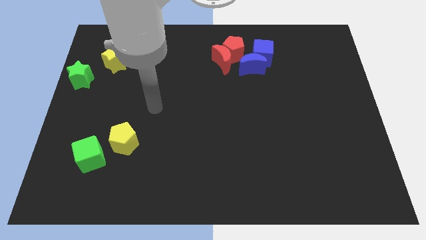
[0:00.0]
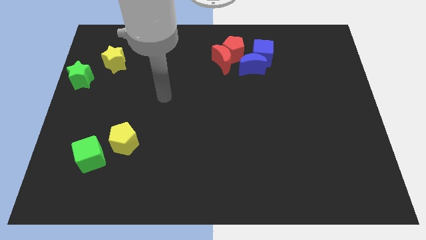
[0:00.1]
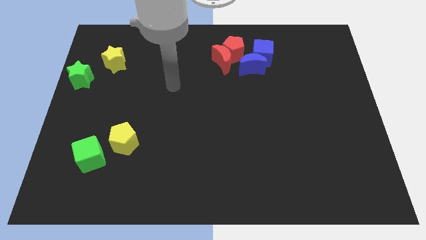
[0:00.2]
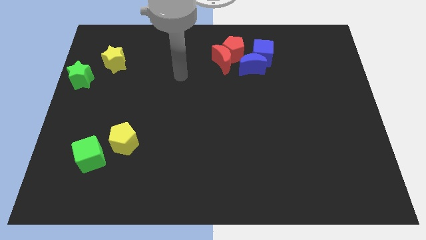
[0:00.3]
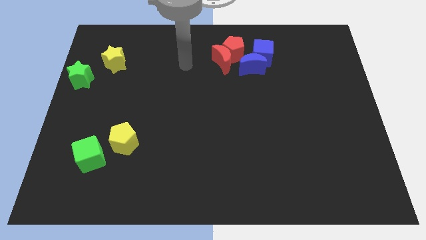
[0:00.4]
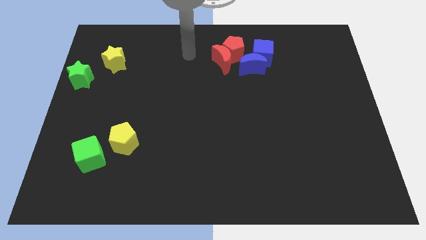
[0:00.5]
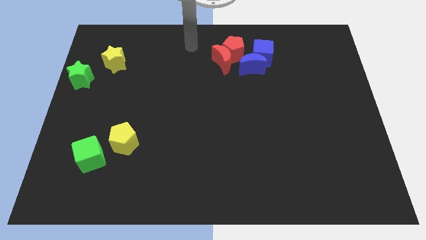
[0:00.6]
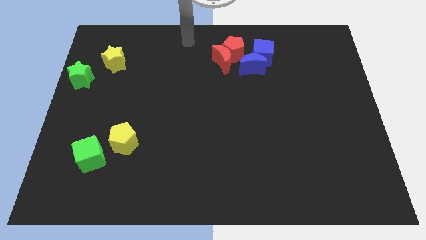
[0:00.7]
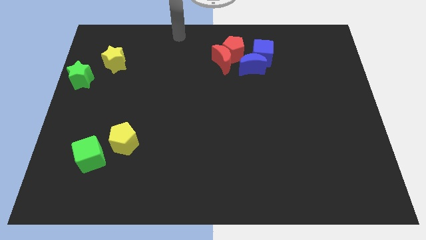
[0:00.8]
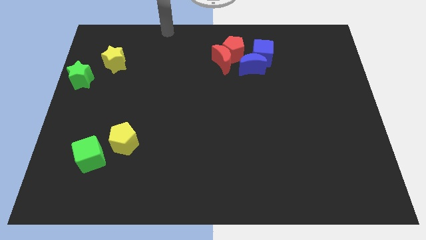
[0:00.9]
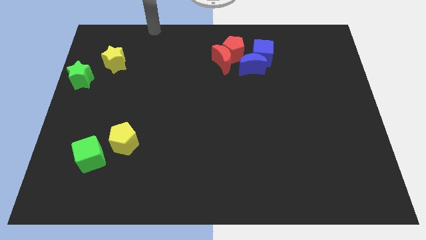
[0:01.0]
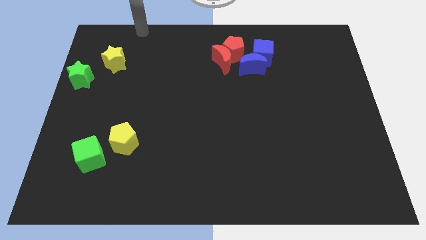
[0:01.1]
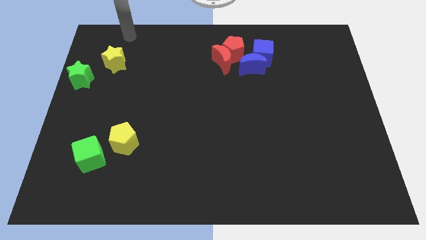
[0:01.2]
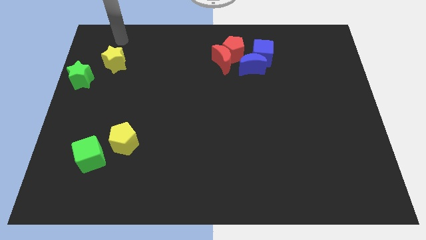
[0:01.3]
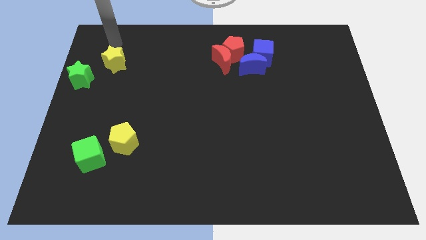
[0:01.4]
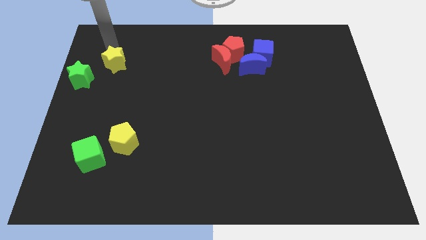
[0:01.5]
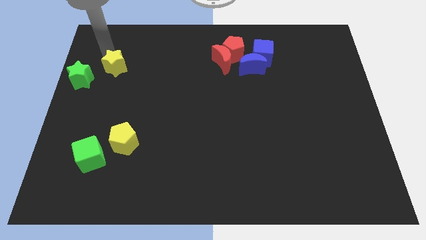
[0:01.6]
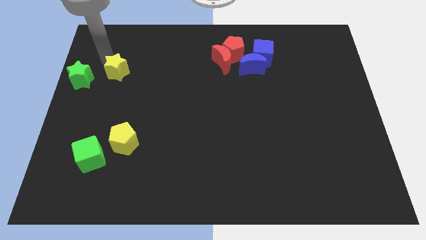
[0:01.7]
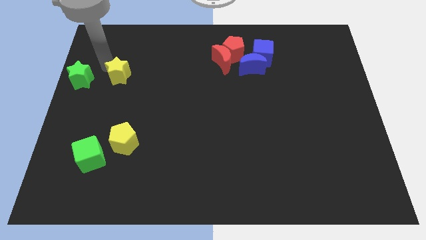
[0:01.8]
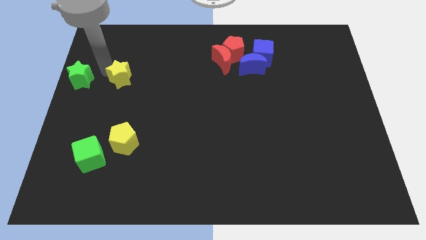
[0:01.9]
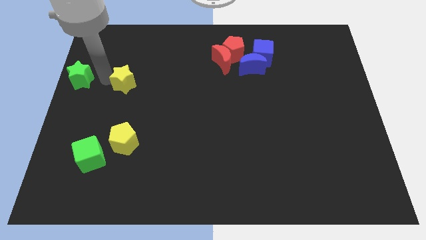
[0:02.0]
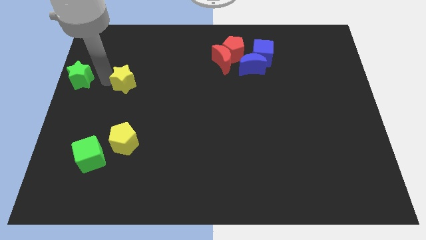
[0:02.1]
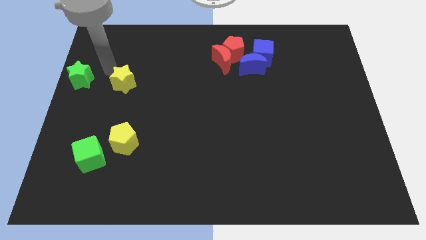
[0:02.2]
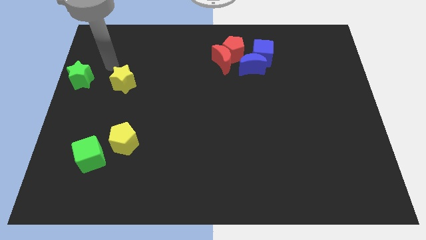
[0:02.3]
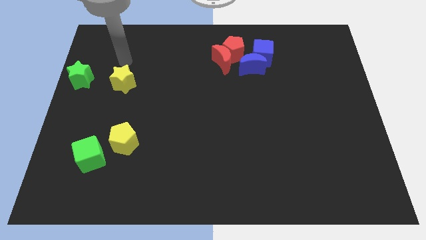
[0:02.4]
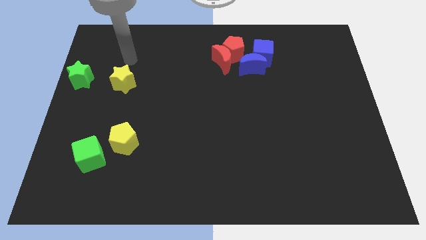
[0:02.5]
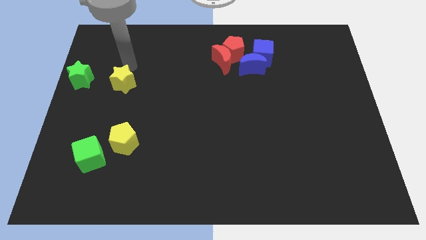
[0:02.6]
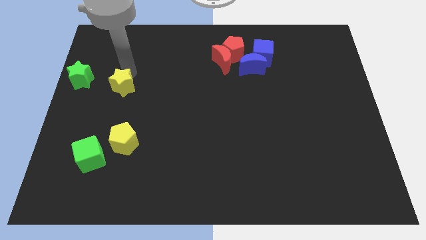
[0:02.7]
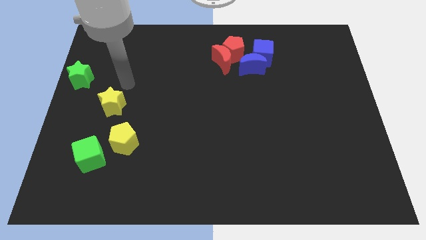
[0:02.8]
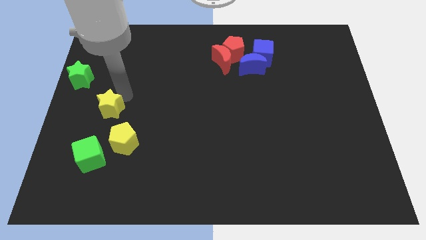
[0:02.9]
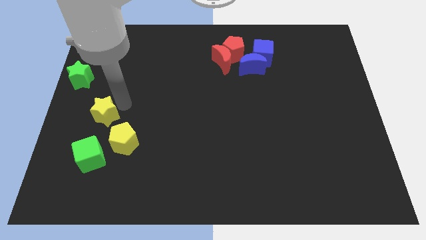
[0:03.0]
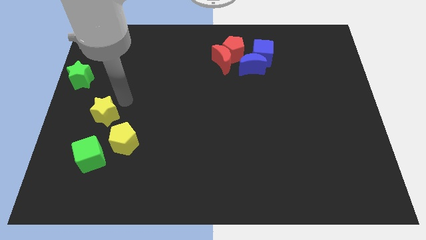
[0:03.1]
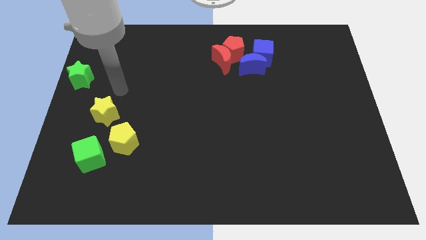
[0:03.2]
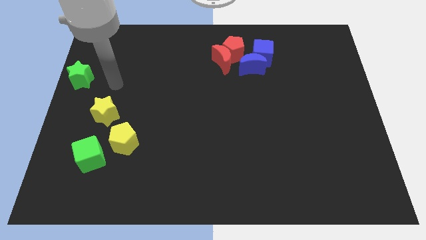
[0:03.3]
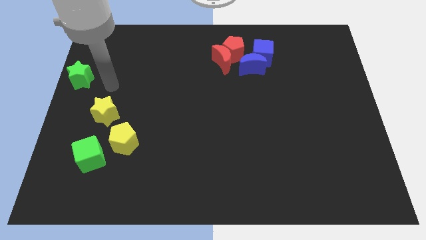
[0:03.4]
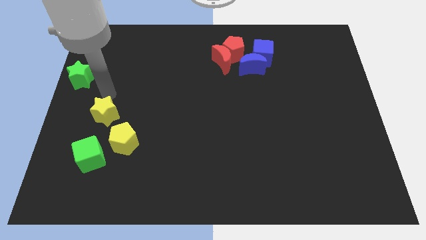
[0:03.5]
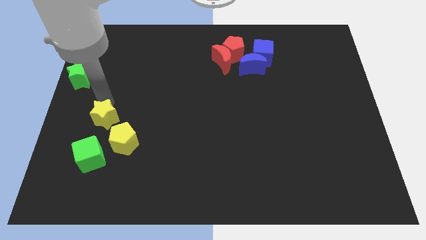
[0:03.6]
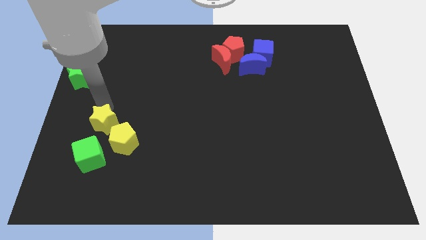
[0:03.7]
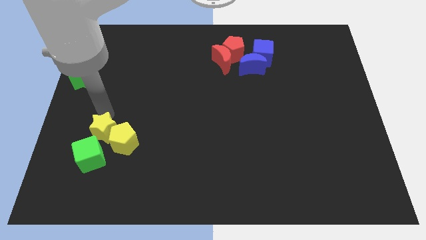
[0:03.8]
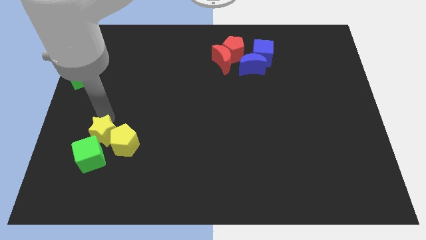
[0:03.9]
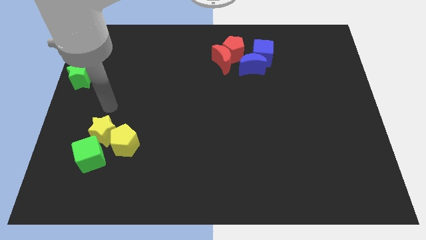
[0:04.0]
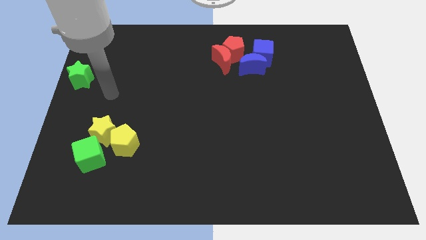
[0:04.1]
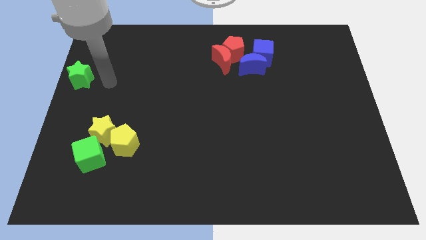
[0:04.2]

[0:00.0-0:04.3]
push the yellow star close to the left of the yellow pentagon

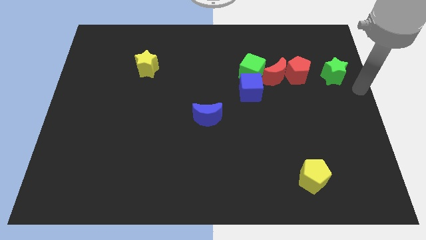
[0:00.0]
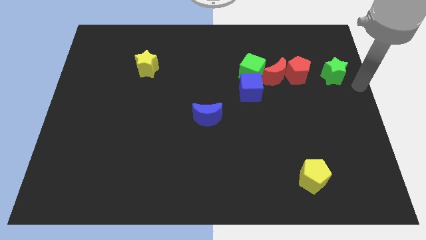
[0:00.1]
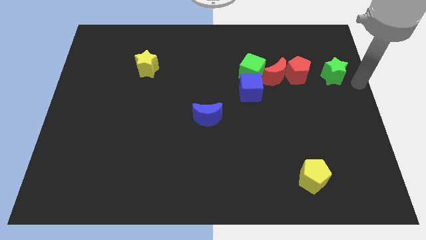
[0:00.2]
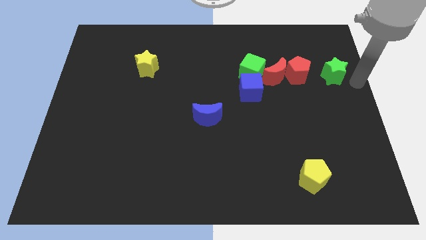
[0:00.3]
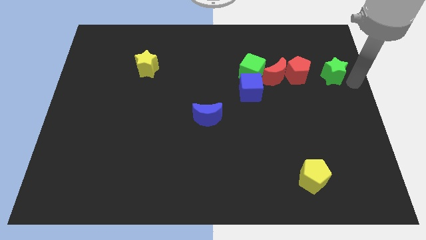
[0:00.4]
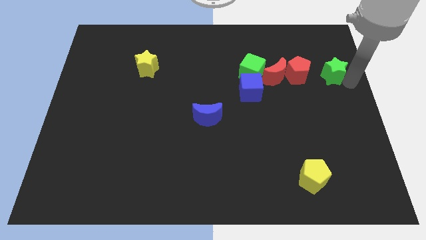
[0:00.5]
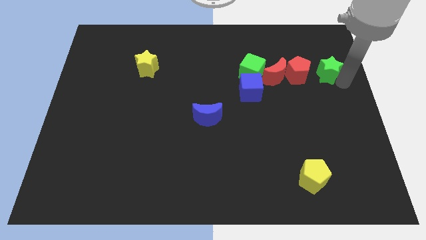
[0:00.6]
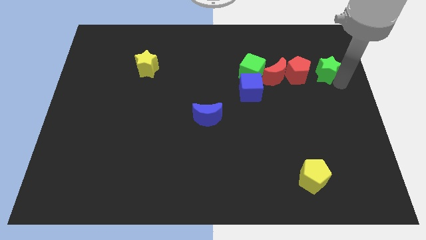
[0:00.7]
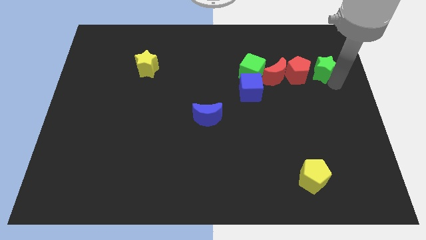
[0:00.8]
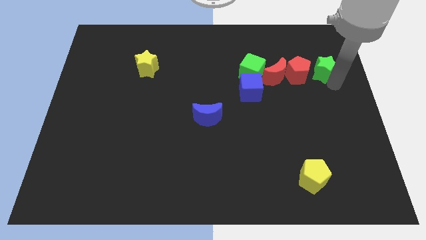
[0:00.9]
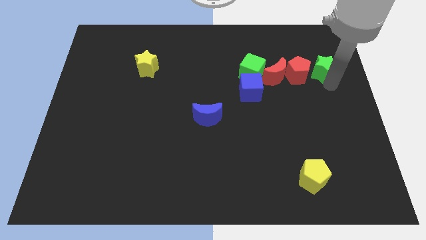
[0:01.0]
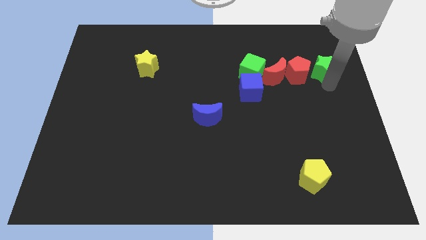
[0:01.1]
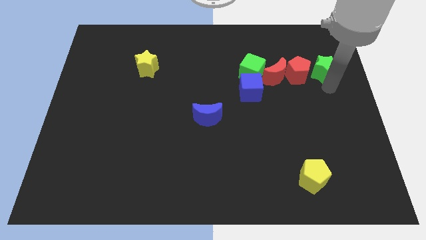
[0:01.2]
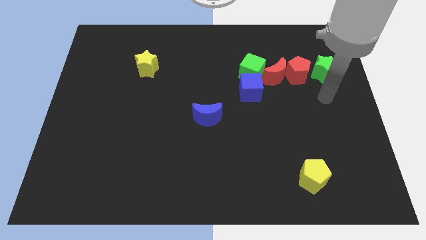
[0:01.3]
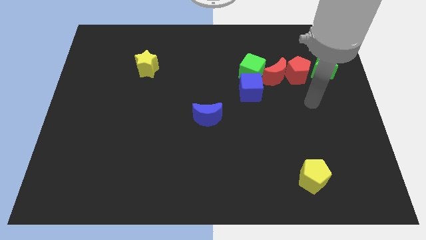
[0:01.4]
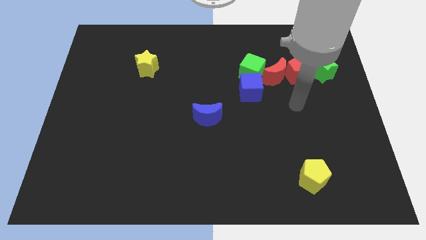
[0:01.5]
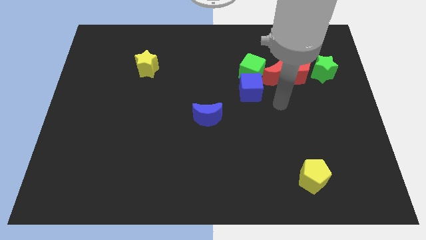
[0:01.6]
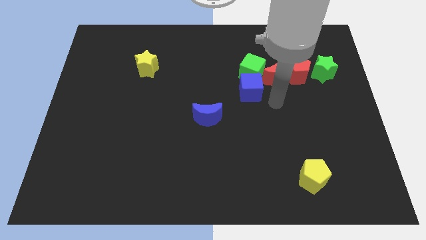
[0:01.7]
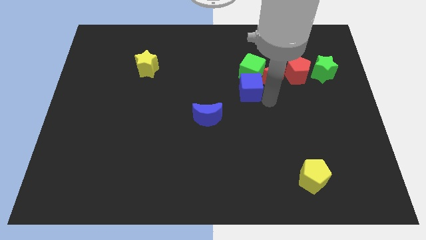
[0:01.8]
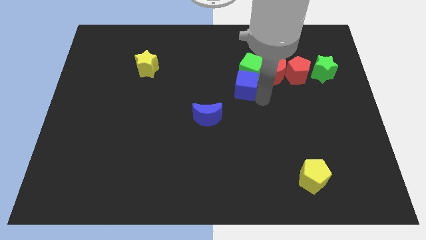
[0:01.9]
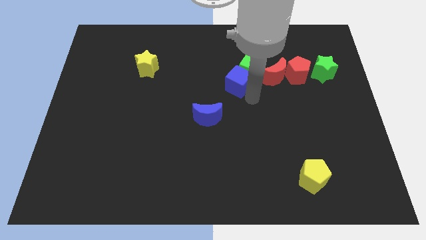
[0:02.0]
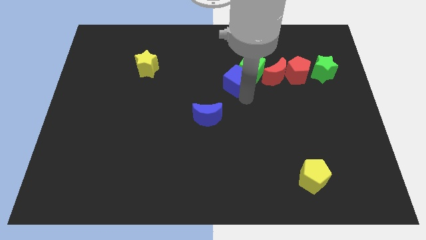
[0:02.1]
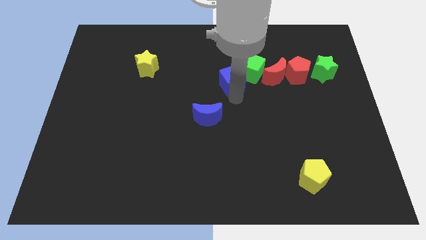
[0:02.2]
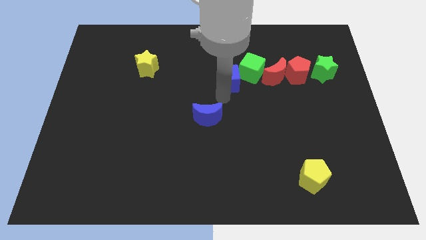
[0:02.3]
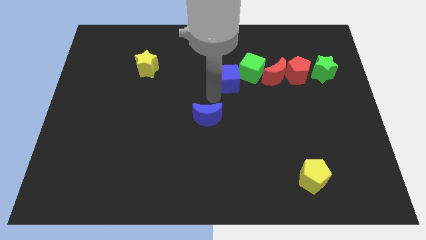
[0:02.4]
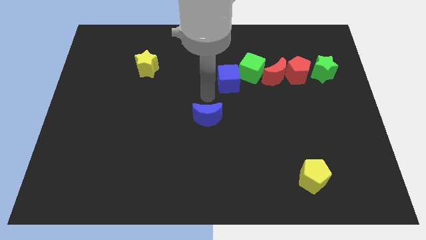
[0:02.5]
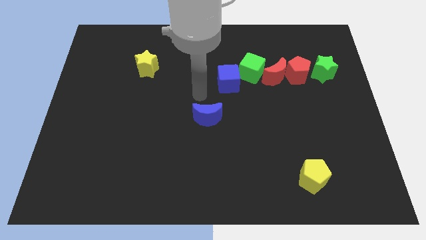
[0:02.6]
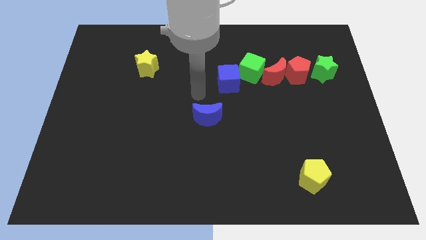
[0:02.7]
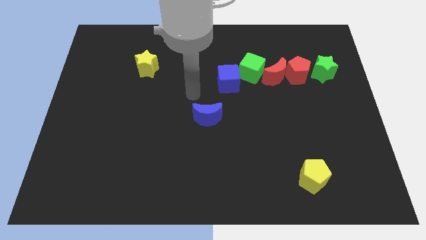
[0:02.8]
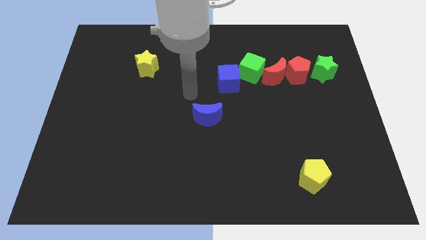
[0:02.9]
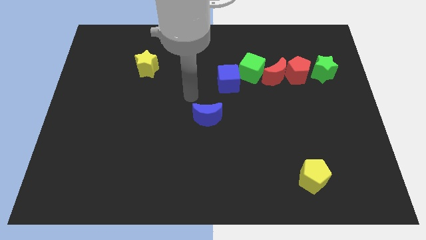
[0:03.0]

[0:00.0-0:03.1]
move the green star to the left

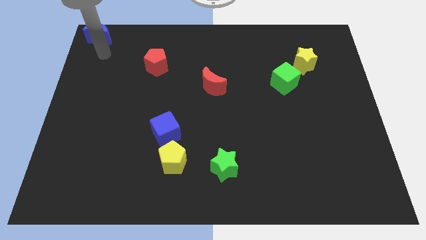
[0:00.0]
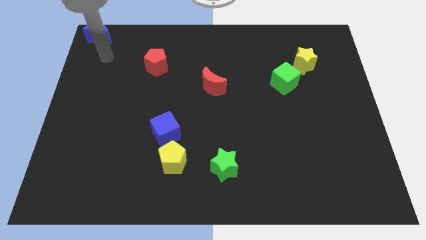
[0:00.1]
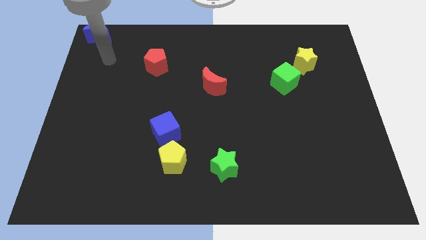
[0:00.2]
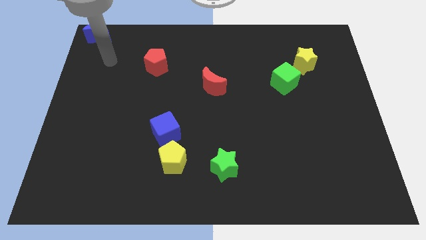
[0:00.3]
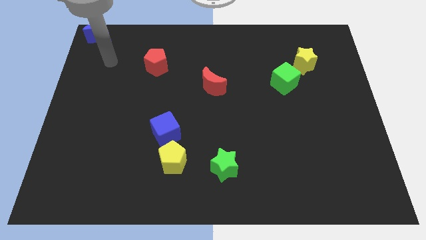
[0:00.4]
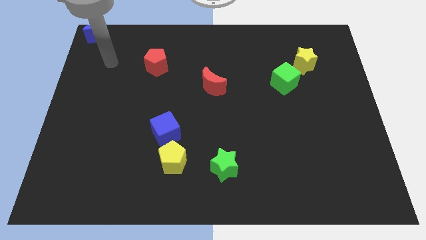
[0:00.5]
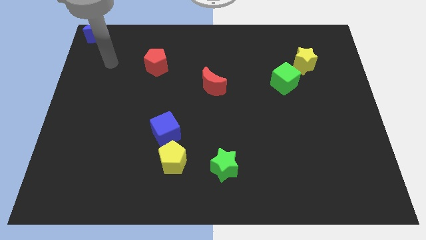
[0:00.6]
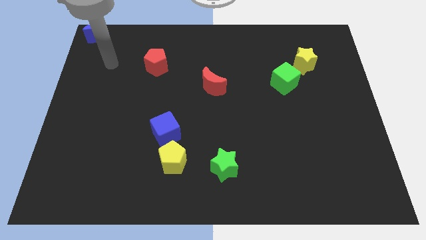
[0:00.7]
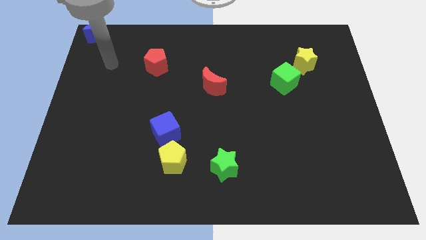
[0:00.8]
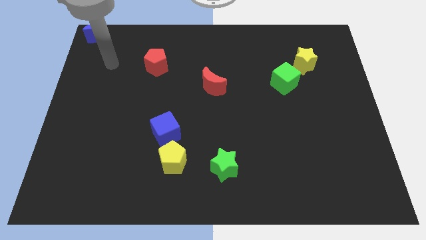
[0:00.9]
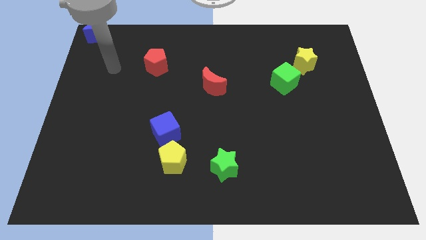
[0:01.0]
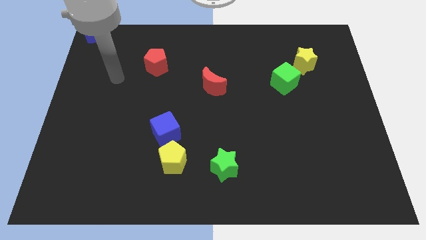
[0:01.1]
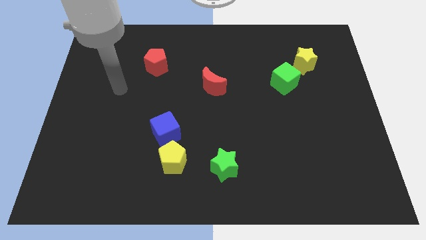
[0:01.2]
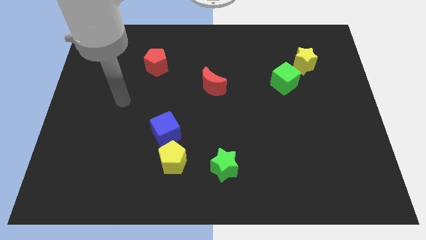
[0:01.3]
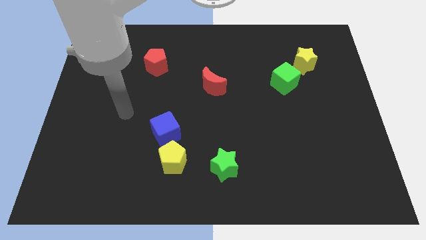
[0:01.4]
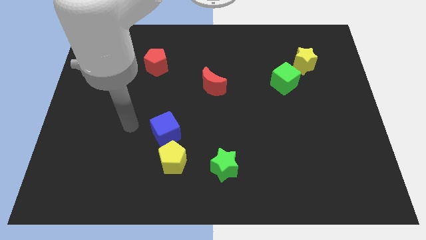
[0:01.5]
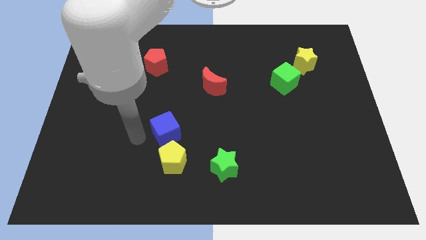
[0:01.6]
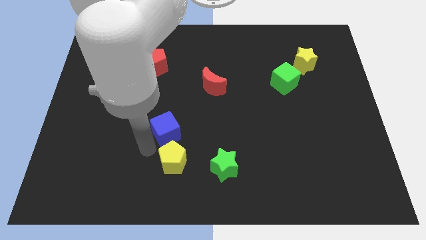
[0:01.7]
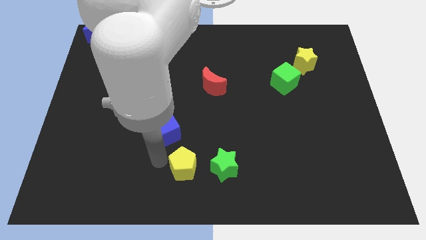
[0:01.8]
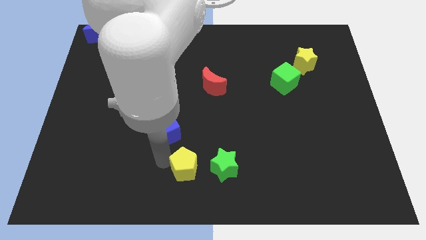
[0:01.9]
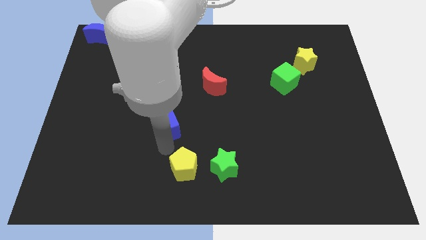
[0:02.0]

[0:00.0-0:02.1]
place your arm in between the yellow pentagon and blue cube
